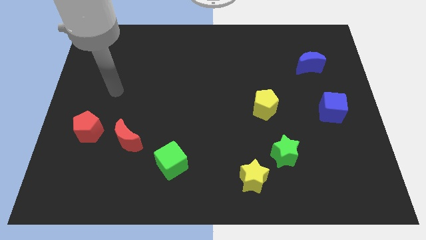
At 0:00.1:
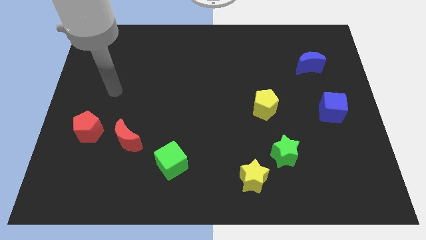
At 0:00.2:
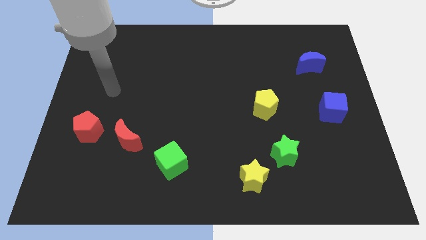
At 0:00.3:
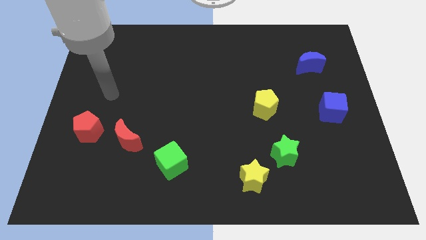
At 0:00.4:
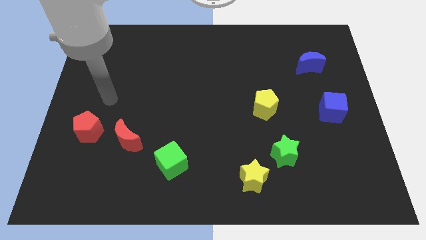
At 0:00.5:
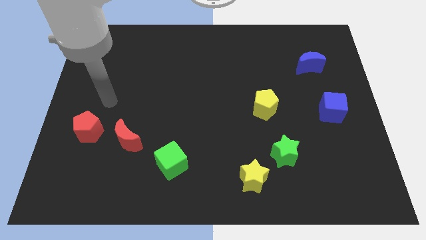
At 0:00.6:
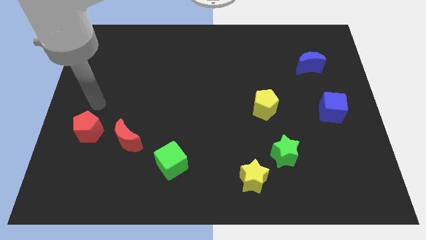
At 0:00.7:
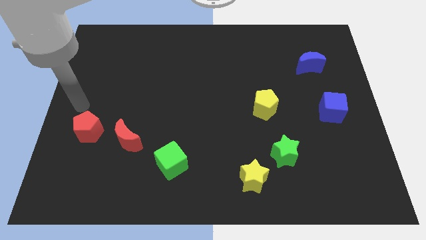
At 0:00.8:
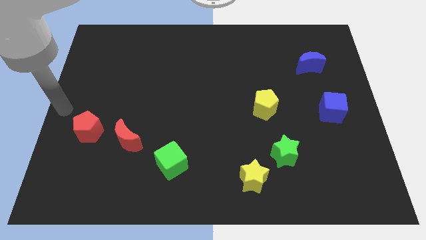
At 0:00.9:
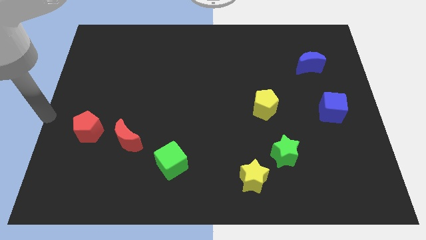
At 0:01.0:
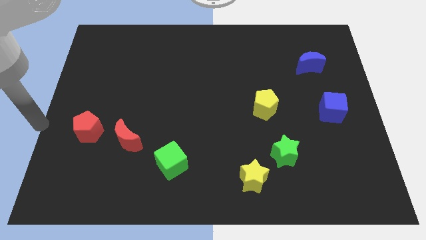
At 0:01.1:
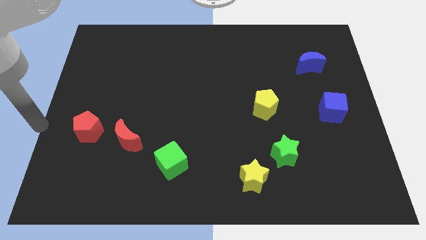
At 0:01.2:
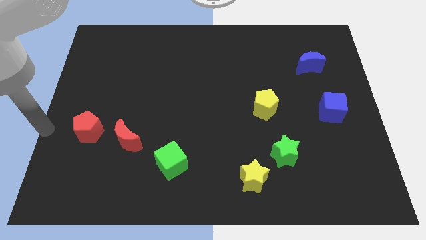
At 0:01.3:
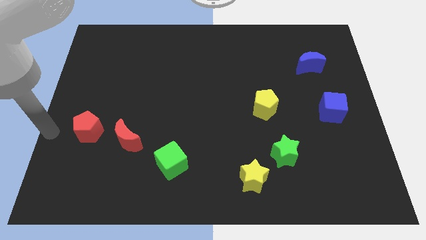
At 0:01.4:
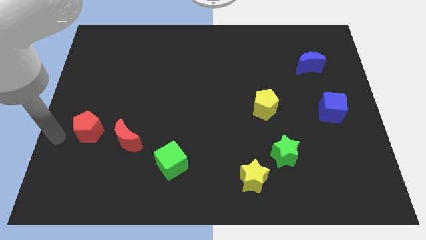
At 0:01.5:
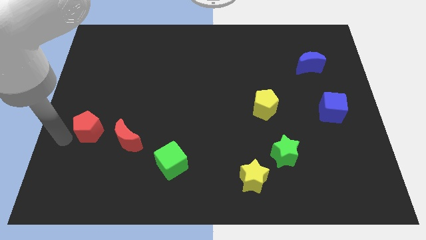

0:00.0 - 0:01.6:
point your arm at the left side of the red pentagon

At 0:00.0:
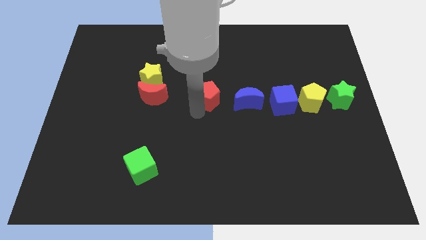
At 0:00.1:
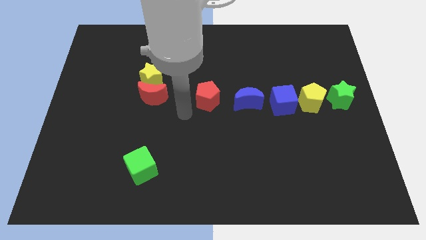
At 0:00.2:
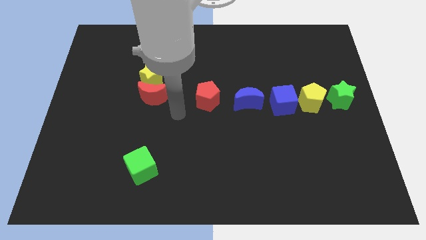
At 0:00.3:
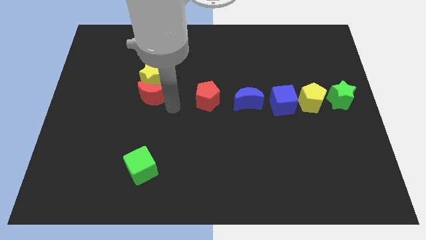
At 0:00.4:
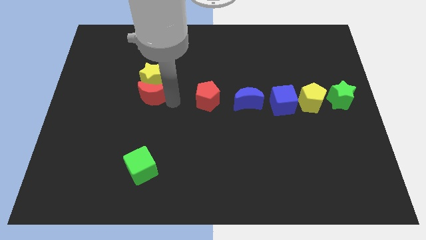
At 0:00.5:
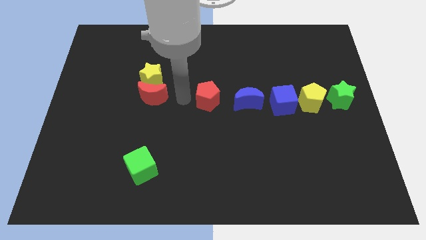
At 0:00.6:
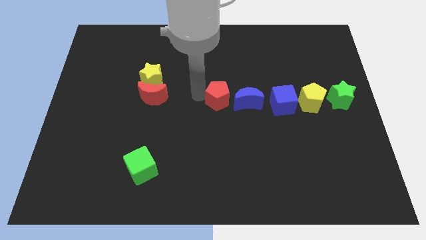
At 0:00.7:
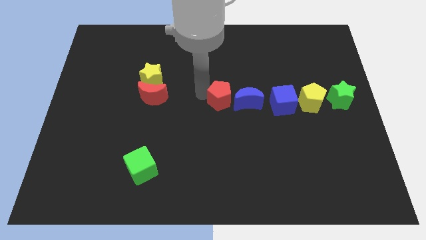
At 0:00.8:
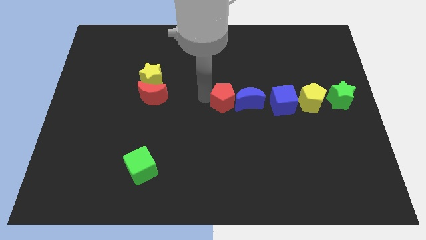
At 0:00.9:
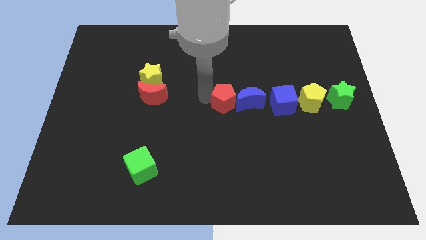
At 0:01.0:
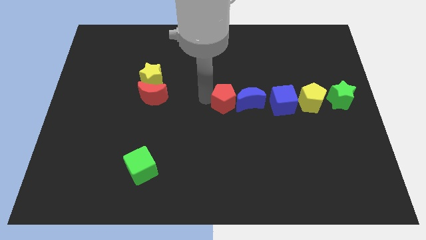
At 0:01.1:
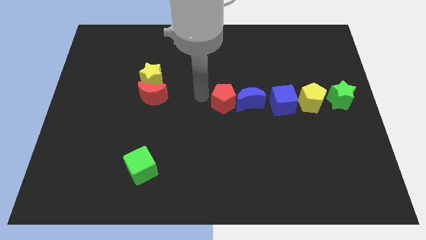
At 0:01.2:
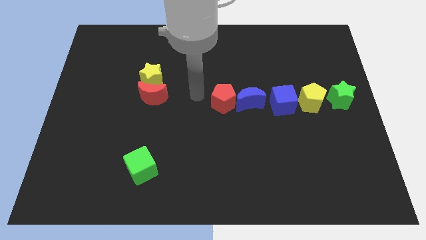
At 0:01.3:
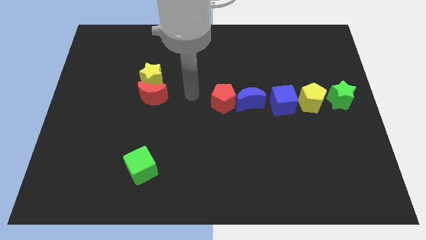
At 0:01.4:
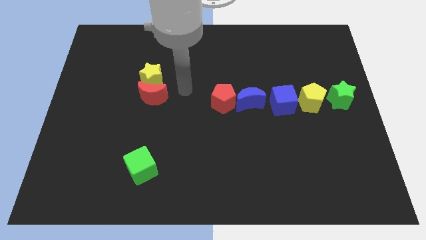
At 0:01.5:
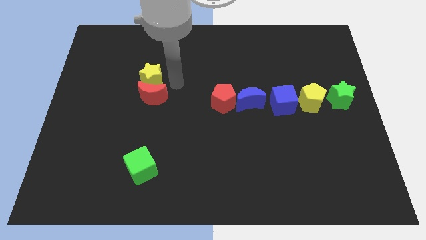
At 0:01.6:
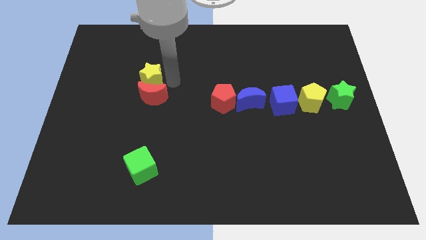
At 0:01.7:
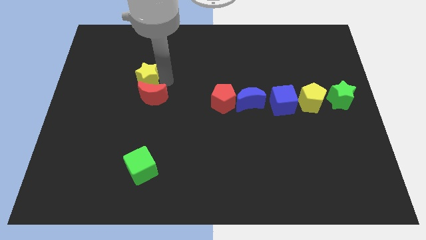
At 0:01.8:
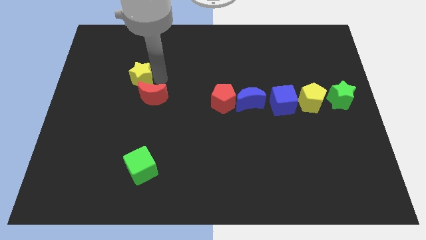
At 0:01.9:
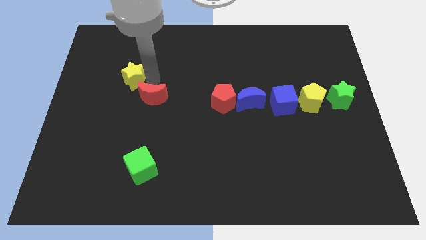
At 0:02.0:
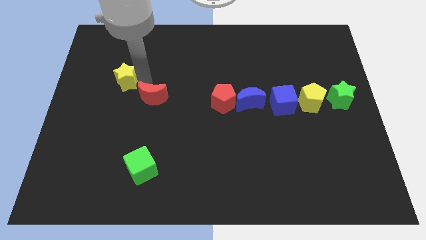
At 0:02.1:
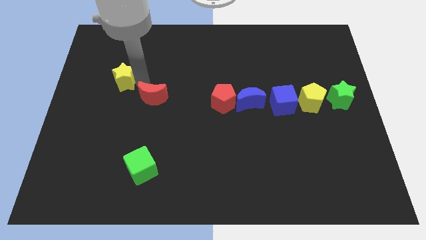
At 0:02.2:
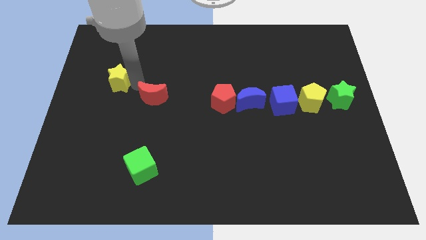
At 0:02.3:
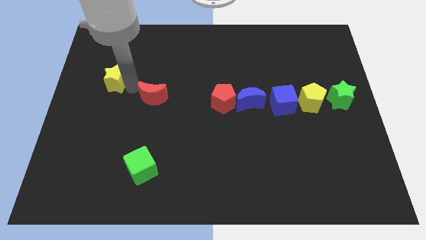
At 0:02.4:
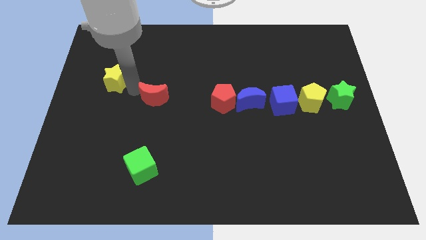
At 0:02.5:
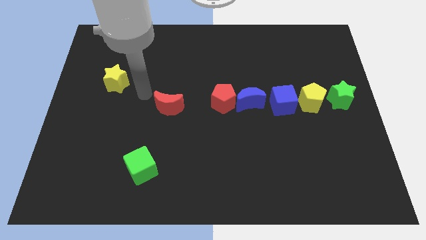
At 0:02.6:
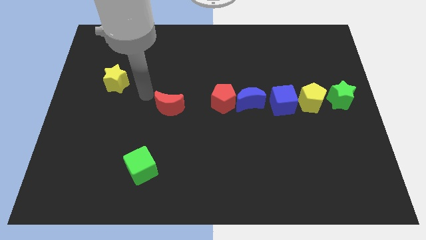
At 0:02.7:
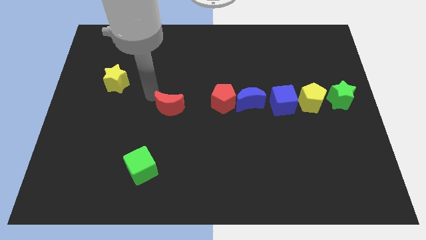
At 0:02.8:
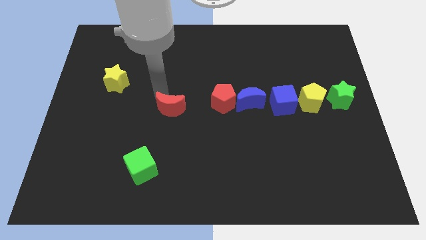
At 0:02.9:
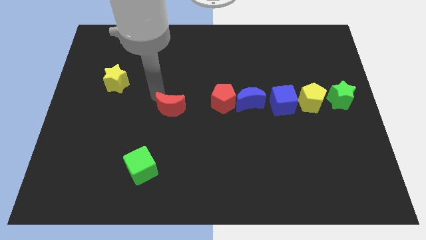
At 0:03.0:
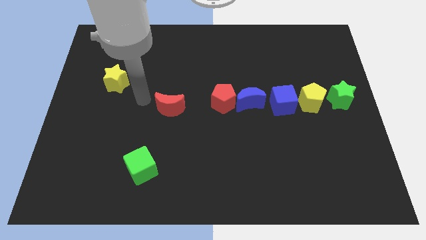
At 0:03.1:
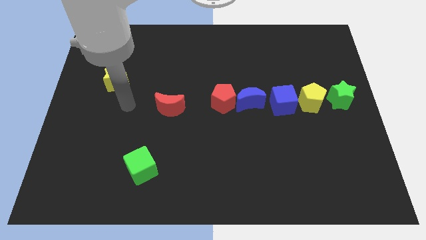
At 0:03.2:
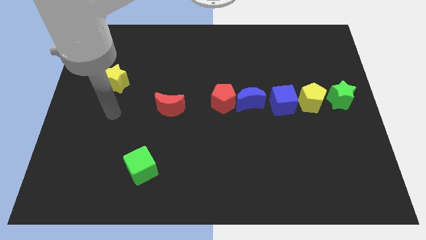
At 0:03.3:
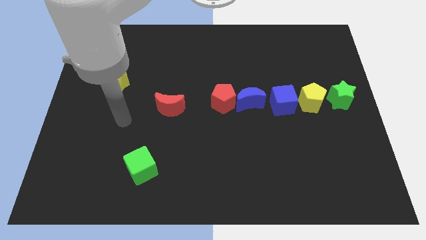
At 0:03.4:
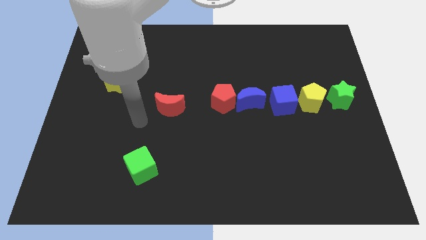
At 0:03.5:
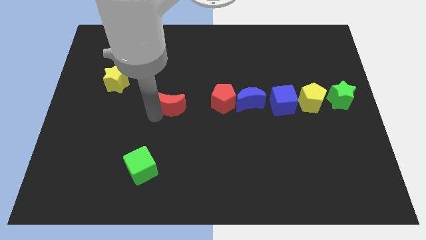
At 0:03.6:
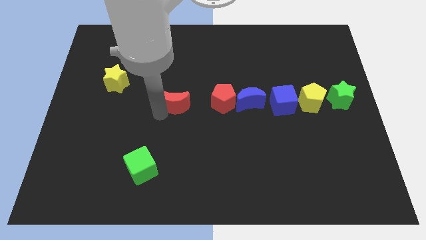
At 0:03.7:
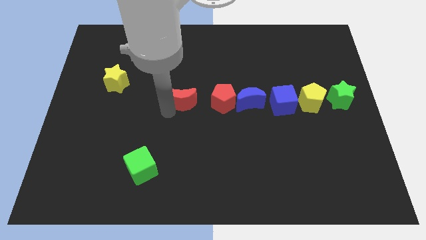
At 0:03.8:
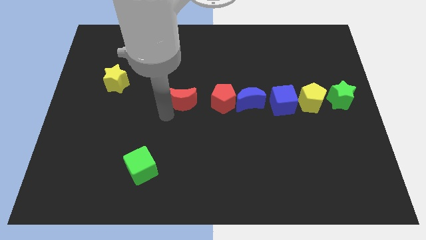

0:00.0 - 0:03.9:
place the red moon left to the red pentagon

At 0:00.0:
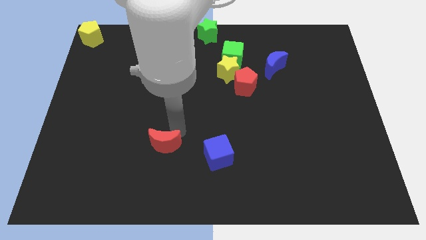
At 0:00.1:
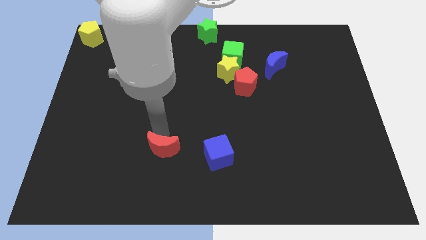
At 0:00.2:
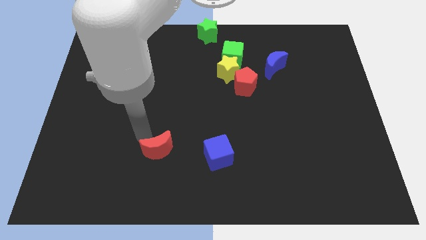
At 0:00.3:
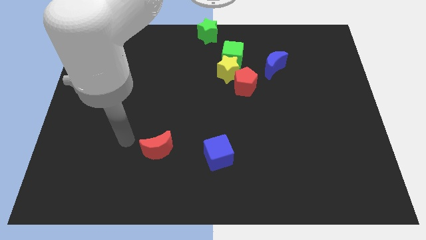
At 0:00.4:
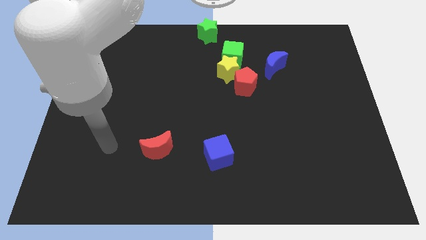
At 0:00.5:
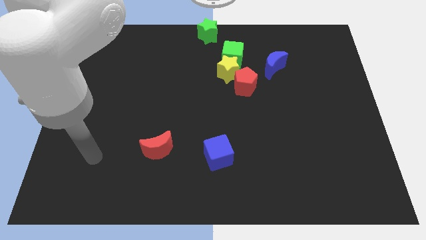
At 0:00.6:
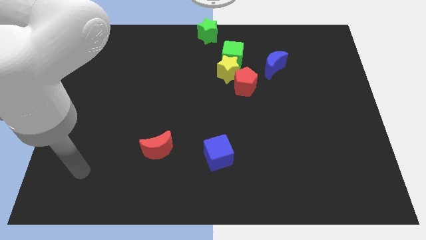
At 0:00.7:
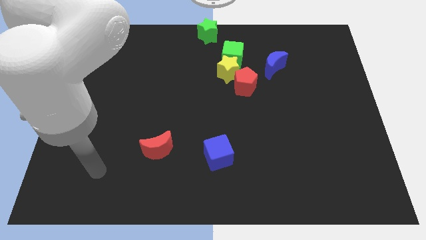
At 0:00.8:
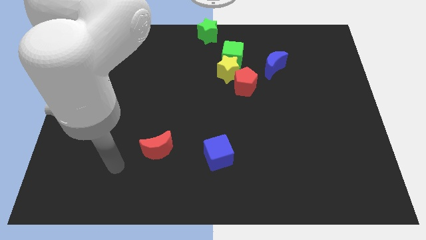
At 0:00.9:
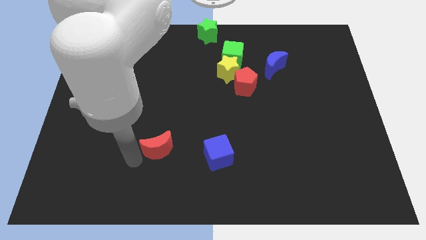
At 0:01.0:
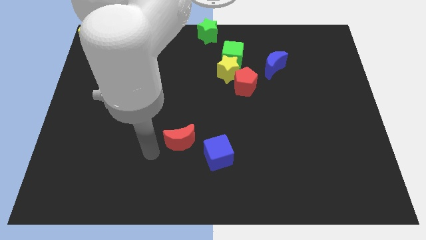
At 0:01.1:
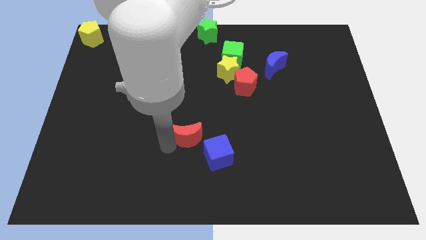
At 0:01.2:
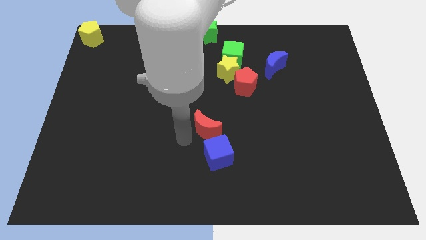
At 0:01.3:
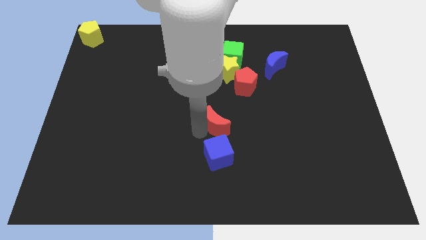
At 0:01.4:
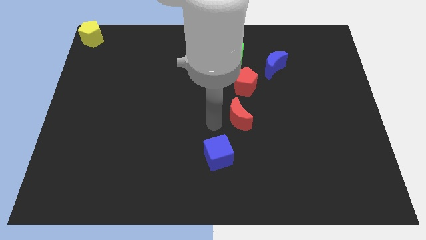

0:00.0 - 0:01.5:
place the red moon above the blue cube

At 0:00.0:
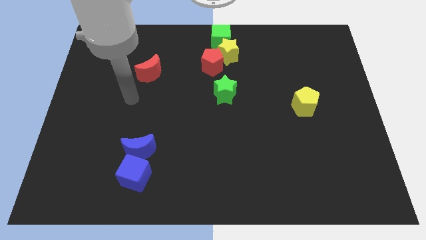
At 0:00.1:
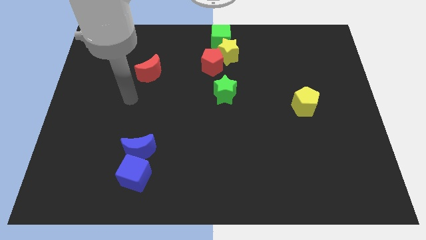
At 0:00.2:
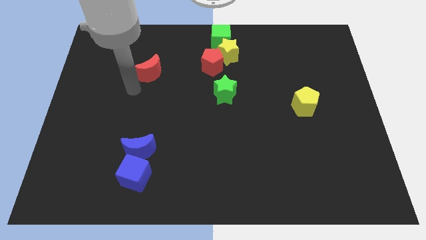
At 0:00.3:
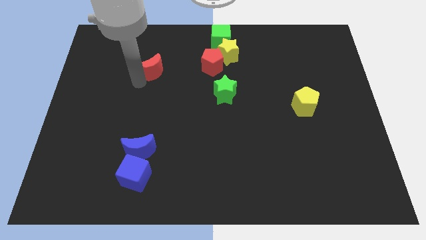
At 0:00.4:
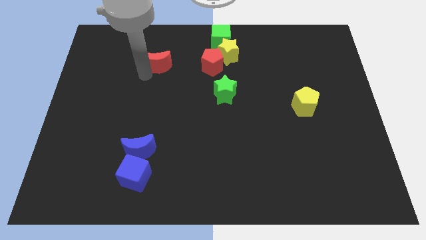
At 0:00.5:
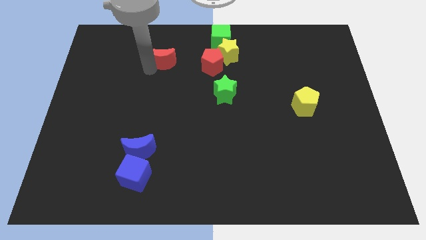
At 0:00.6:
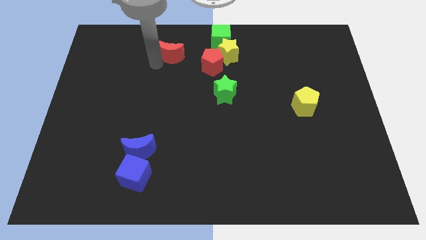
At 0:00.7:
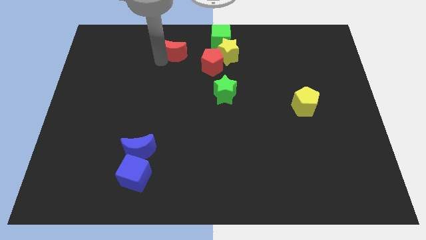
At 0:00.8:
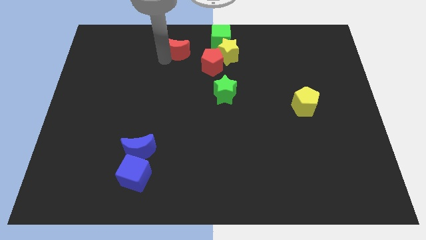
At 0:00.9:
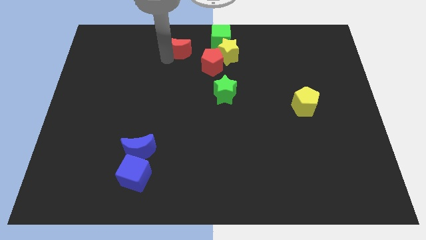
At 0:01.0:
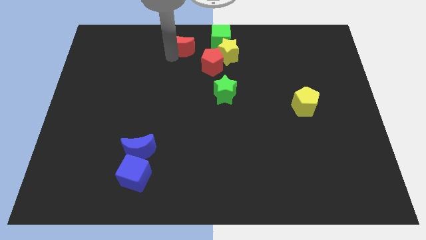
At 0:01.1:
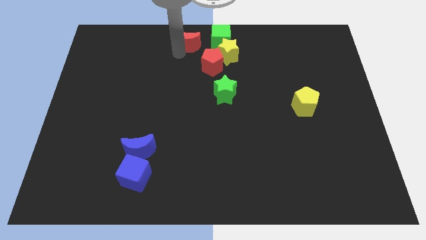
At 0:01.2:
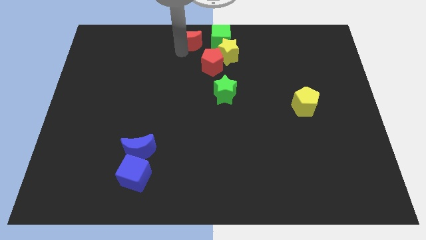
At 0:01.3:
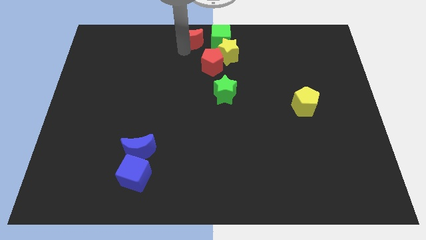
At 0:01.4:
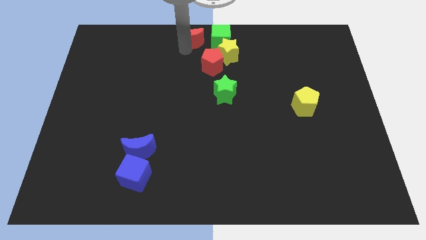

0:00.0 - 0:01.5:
move the red crescent to the top center of the board

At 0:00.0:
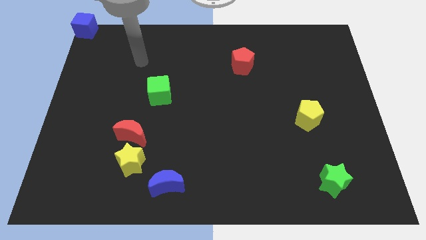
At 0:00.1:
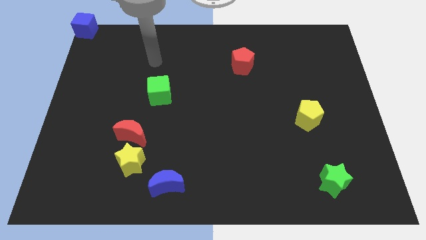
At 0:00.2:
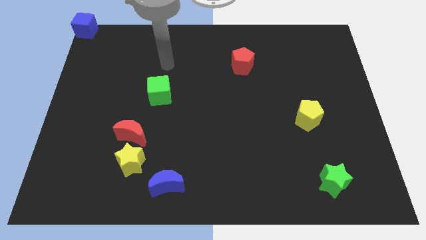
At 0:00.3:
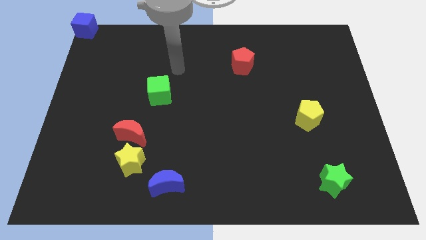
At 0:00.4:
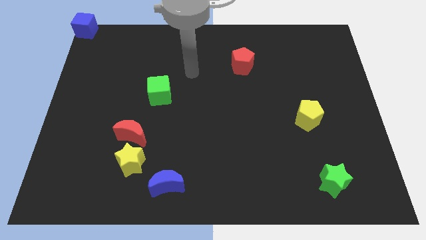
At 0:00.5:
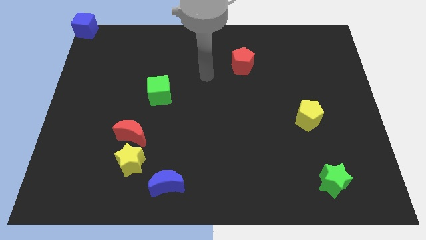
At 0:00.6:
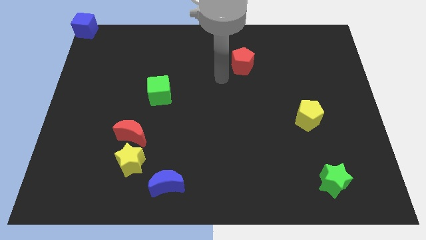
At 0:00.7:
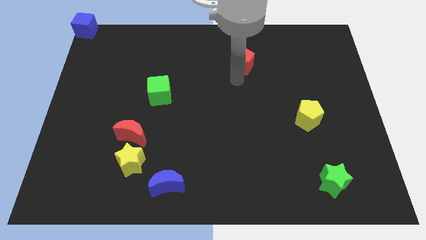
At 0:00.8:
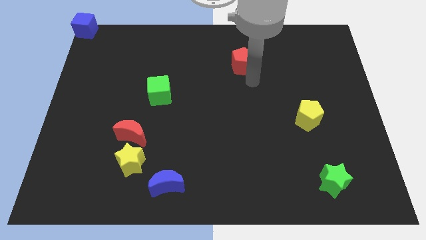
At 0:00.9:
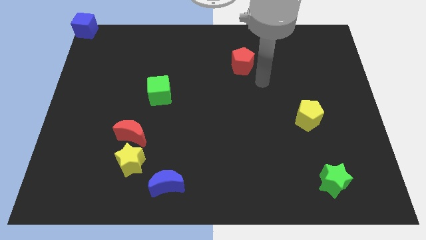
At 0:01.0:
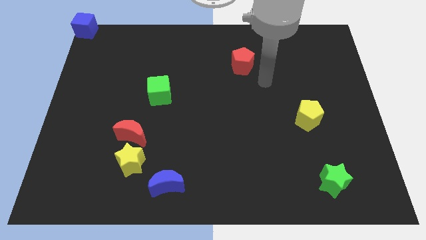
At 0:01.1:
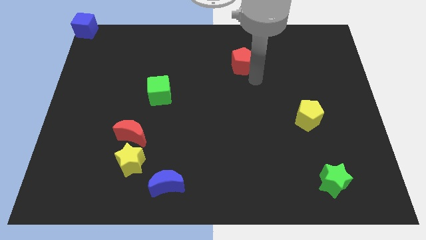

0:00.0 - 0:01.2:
move the arm to the bottom of the red pentagon
